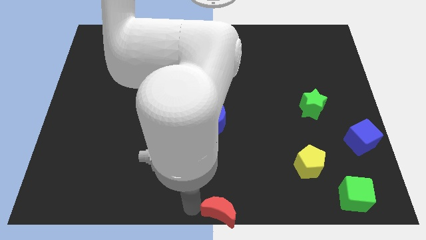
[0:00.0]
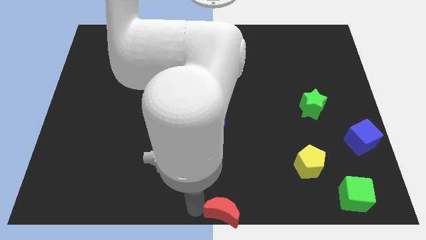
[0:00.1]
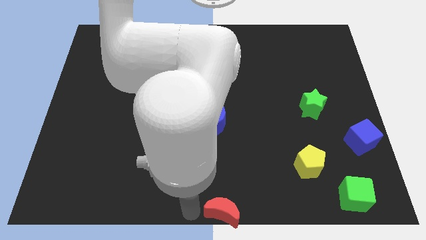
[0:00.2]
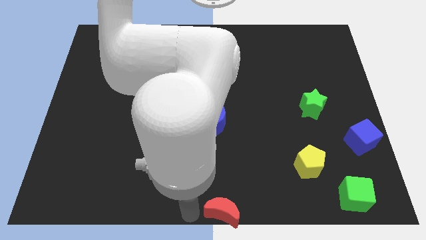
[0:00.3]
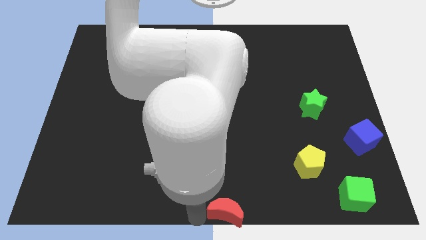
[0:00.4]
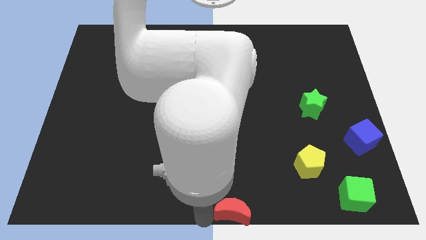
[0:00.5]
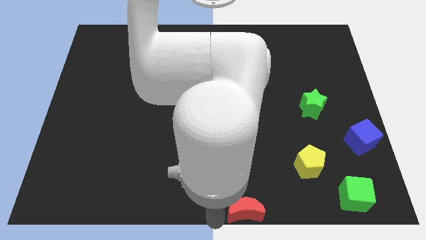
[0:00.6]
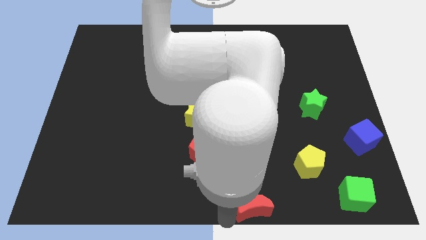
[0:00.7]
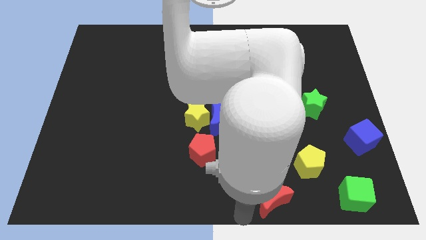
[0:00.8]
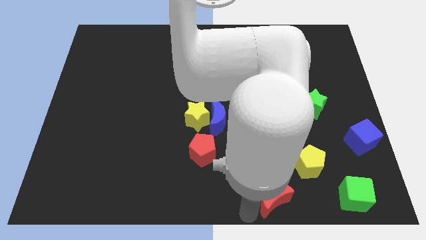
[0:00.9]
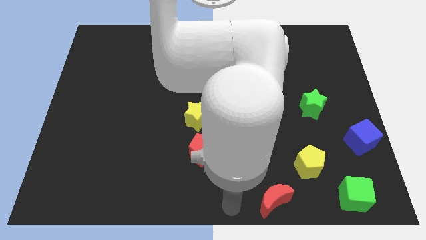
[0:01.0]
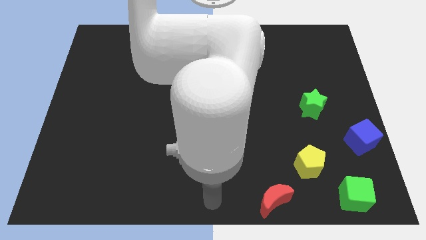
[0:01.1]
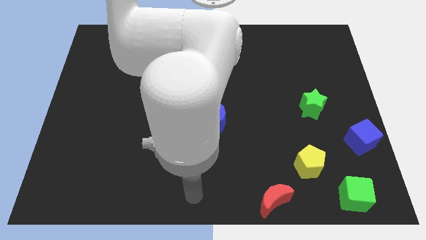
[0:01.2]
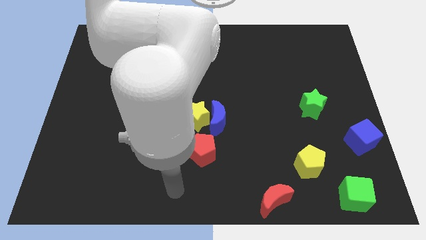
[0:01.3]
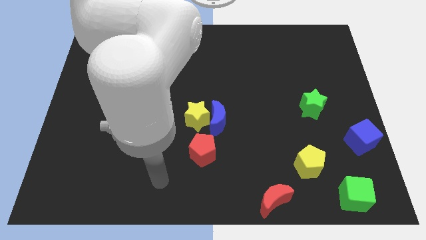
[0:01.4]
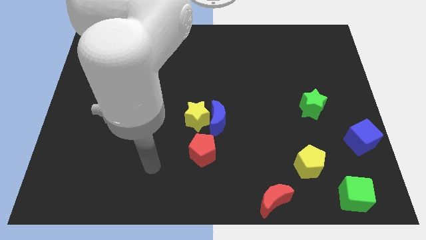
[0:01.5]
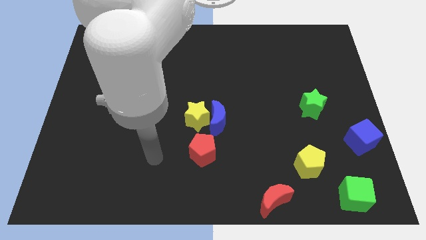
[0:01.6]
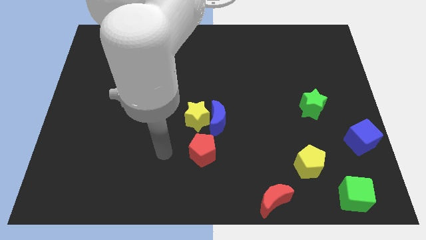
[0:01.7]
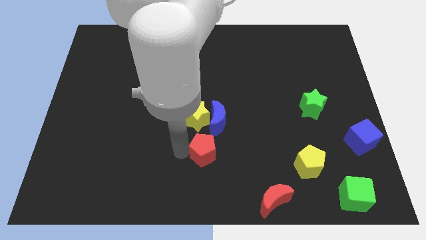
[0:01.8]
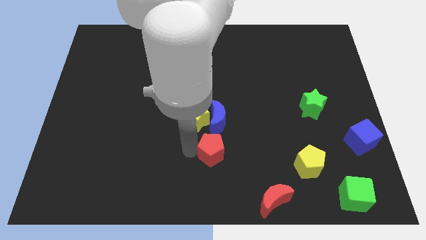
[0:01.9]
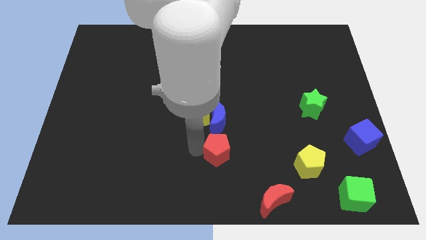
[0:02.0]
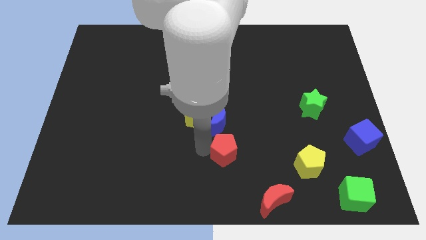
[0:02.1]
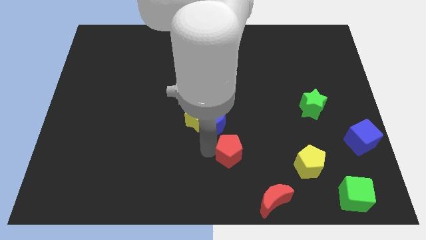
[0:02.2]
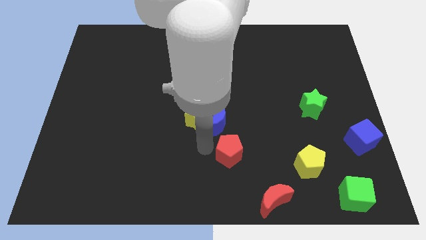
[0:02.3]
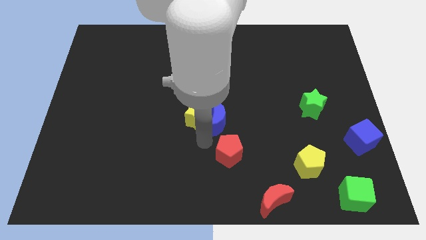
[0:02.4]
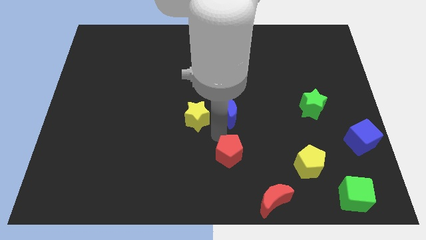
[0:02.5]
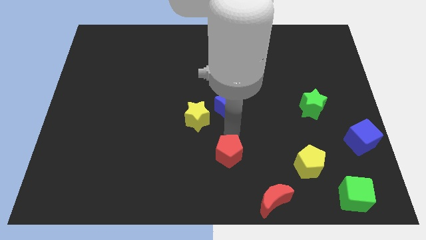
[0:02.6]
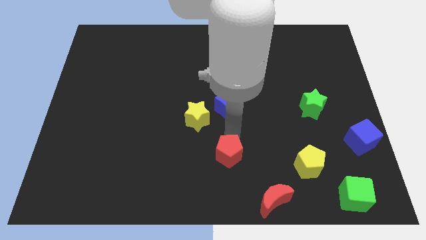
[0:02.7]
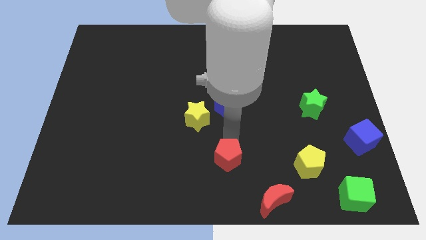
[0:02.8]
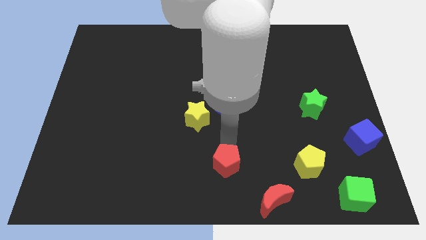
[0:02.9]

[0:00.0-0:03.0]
slightly move the red pentagon towards the right

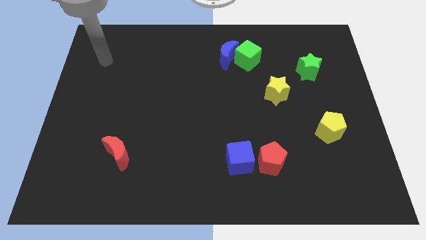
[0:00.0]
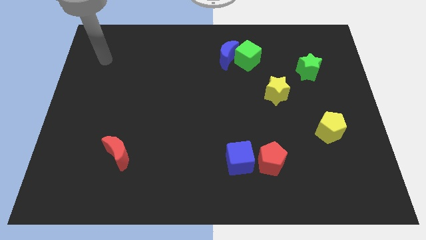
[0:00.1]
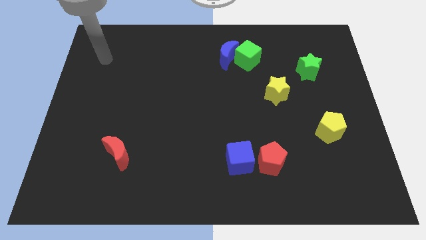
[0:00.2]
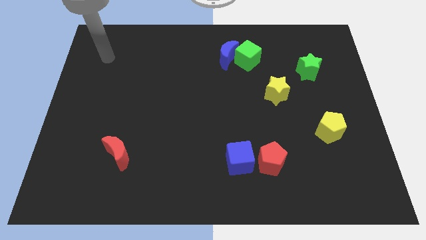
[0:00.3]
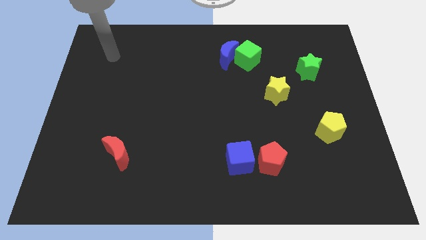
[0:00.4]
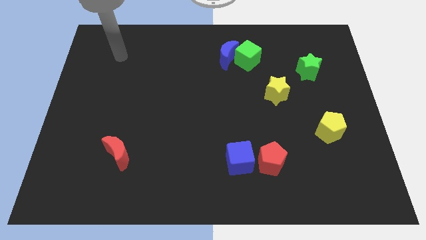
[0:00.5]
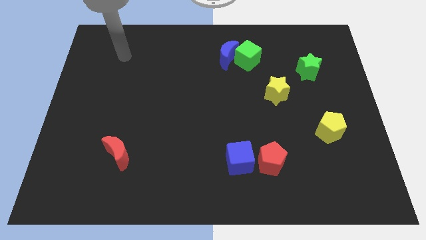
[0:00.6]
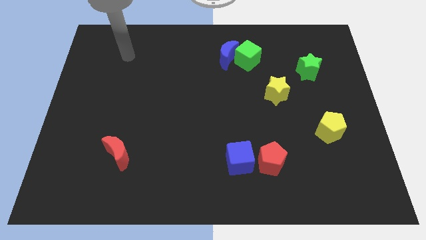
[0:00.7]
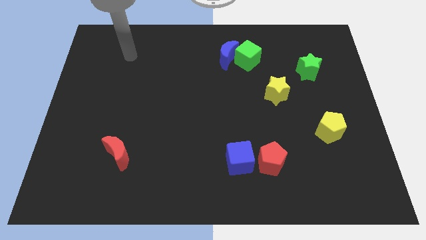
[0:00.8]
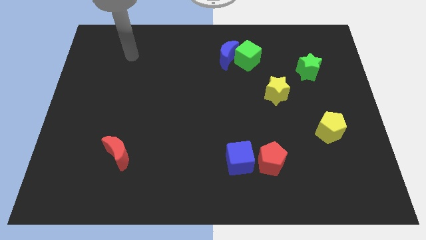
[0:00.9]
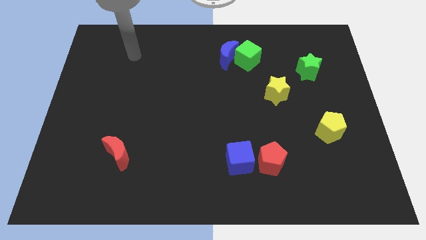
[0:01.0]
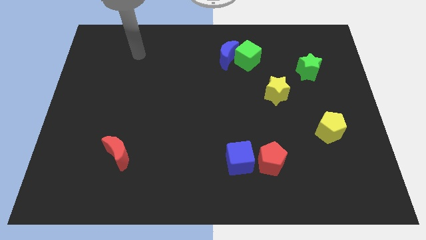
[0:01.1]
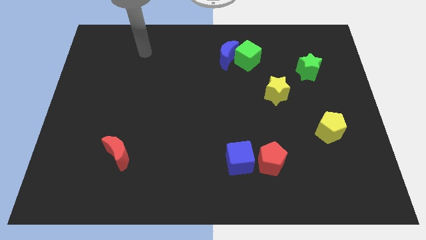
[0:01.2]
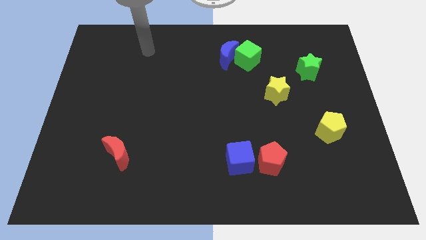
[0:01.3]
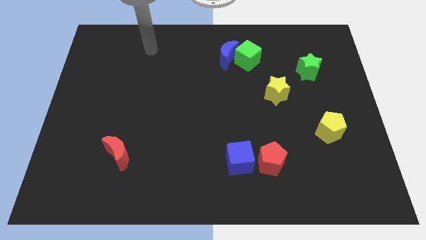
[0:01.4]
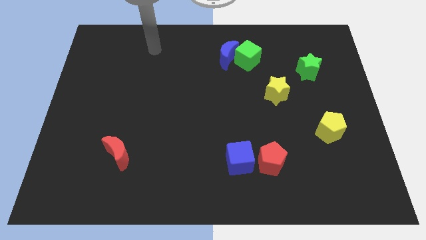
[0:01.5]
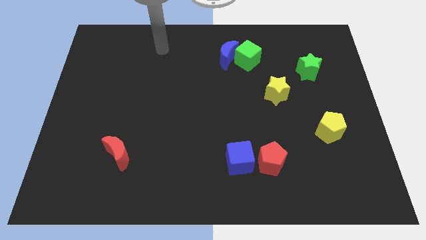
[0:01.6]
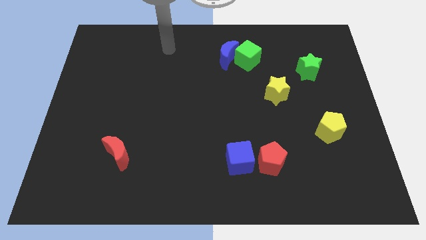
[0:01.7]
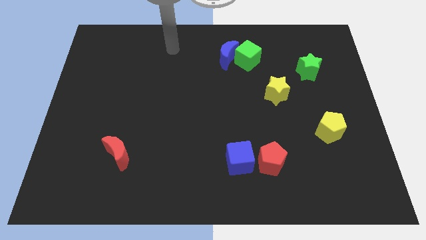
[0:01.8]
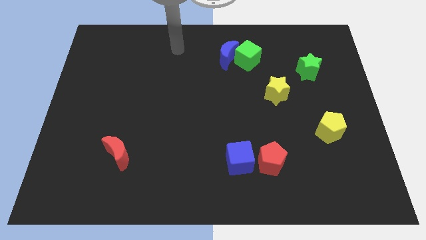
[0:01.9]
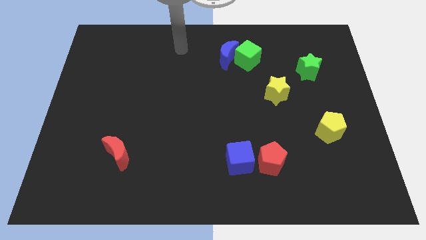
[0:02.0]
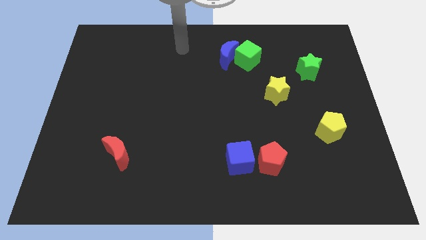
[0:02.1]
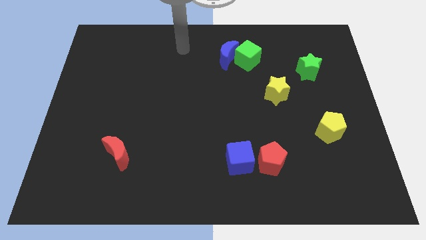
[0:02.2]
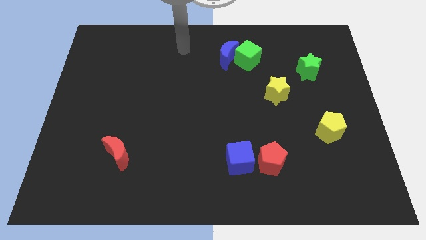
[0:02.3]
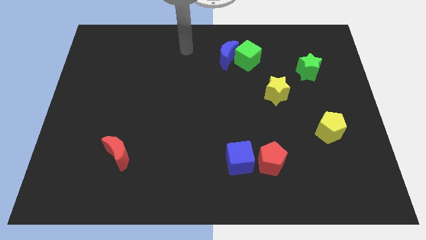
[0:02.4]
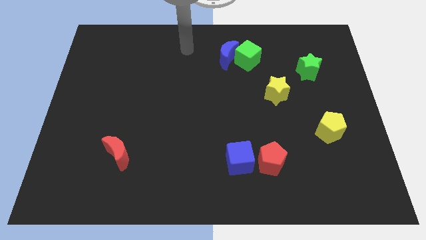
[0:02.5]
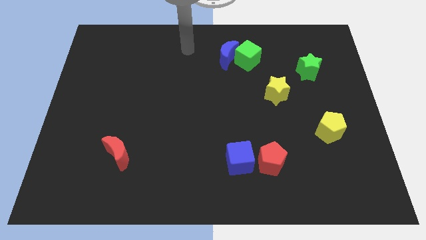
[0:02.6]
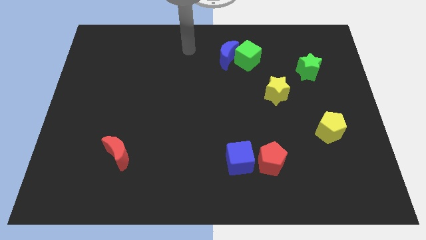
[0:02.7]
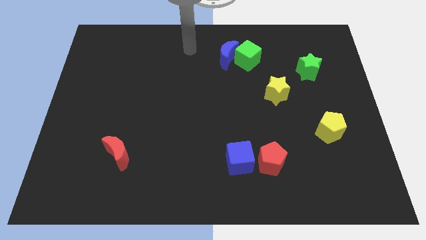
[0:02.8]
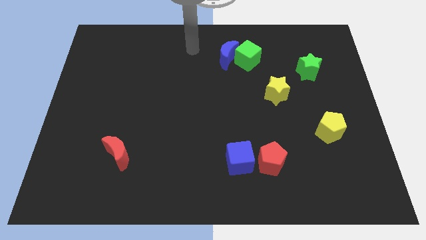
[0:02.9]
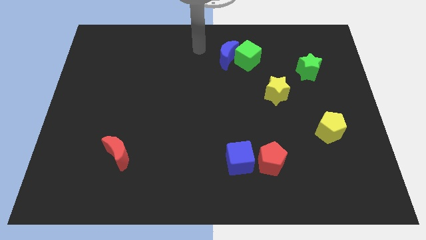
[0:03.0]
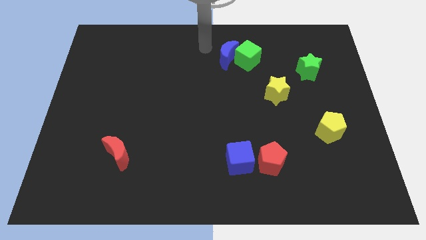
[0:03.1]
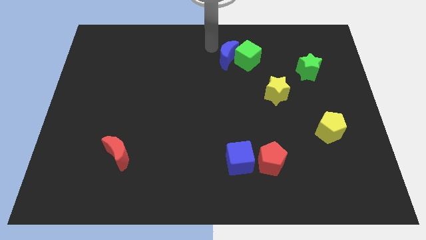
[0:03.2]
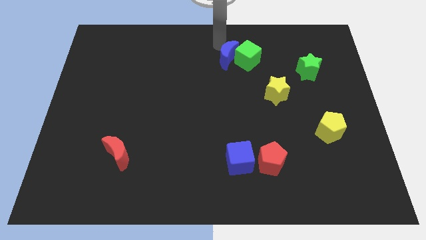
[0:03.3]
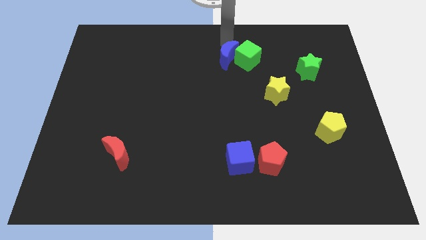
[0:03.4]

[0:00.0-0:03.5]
move the arm from top left to the top center of the board

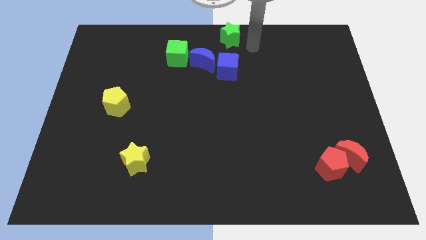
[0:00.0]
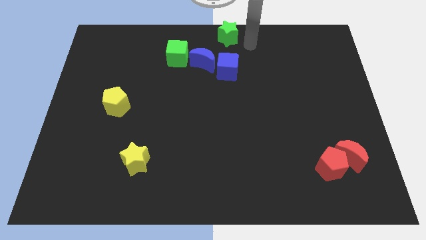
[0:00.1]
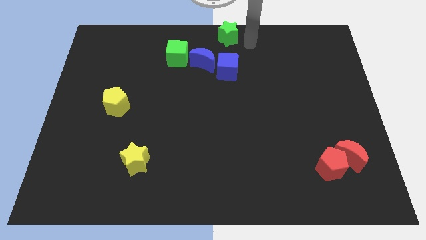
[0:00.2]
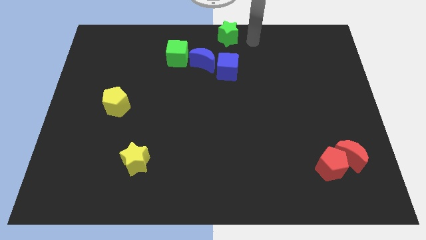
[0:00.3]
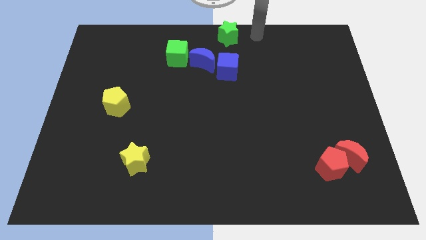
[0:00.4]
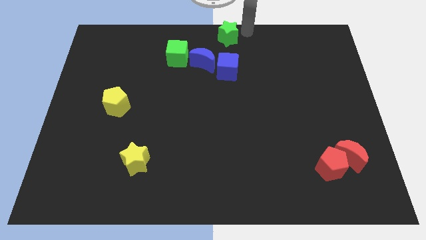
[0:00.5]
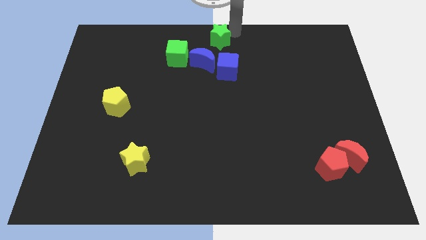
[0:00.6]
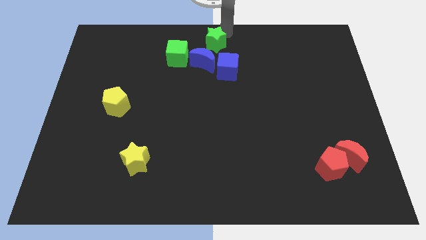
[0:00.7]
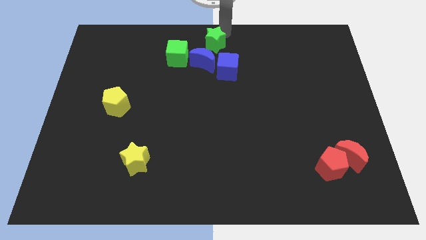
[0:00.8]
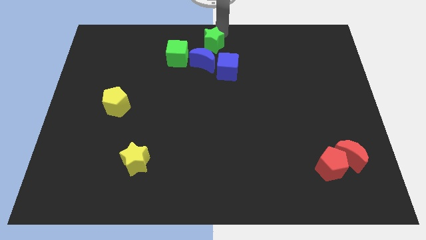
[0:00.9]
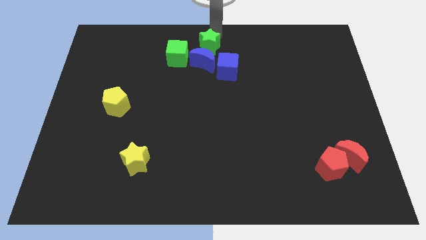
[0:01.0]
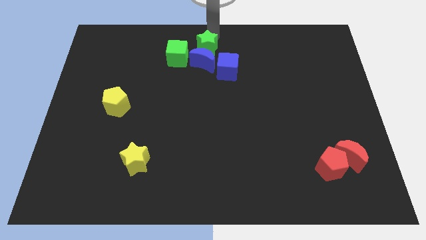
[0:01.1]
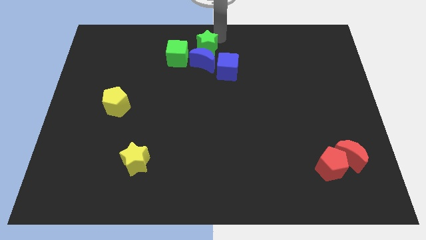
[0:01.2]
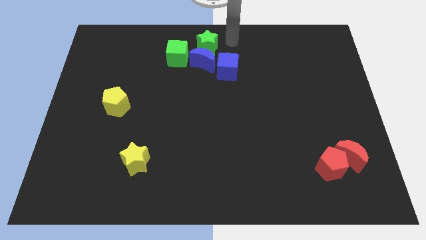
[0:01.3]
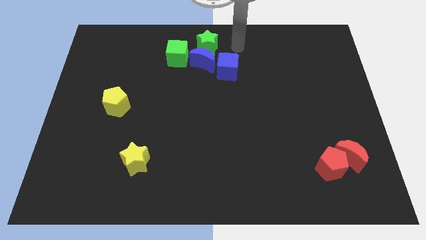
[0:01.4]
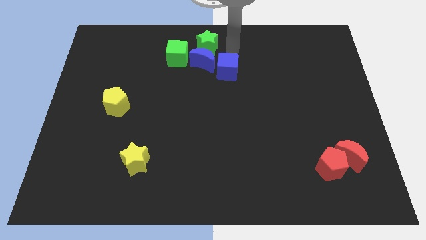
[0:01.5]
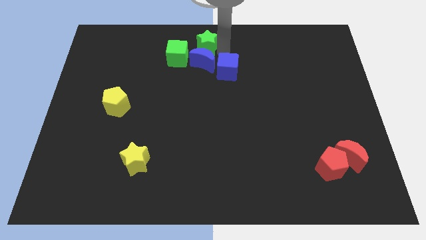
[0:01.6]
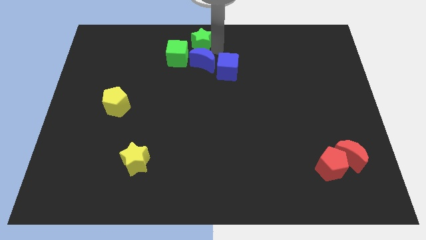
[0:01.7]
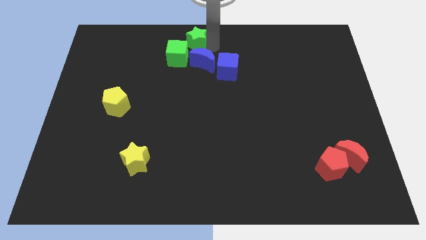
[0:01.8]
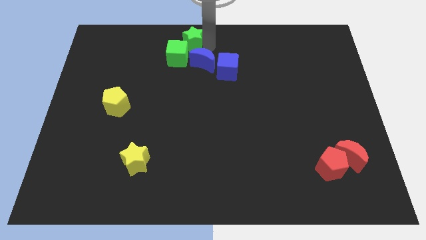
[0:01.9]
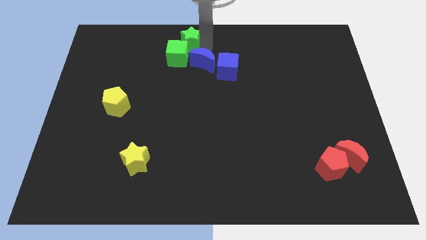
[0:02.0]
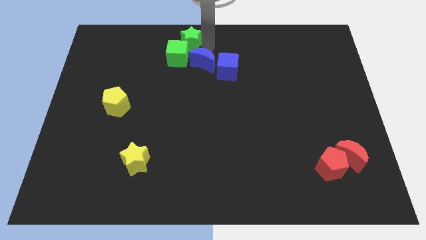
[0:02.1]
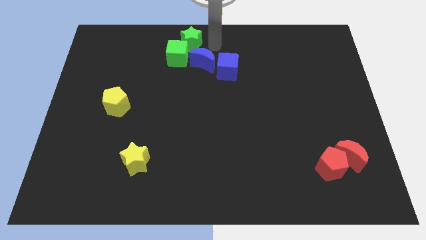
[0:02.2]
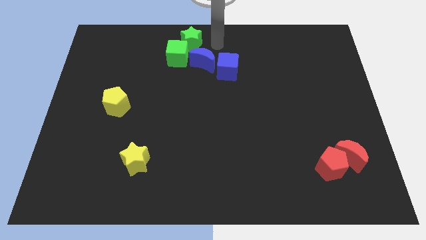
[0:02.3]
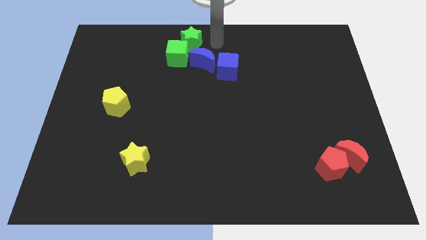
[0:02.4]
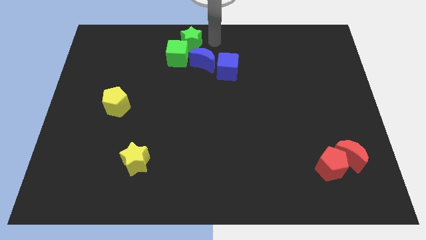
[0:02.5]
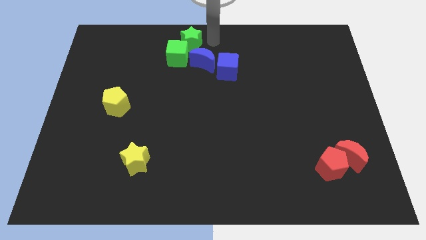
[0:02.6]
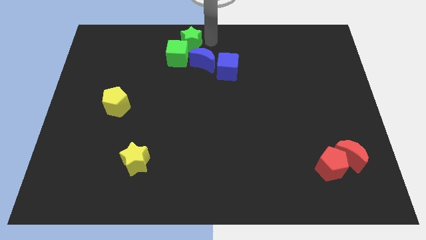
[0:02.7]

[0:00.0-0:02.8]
place green star on top right side of the green cube
